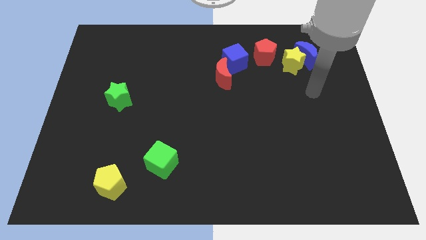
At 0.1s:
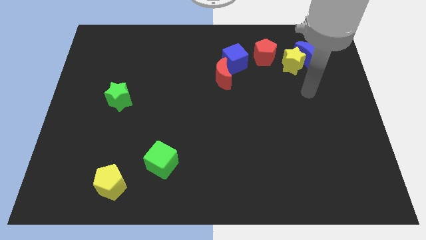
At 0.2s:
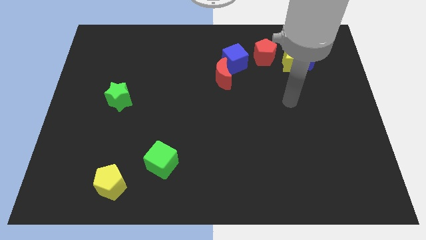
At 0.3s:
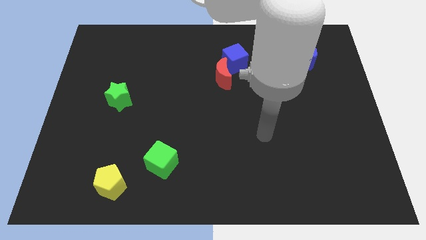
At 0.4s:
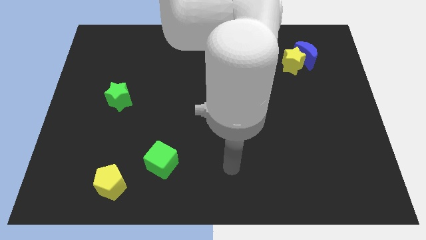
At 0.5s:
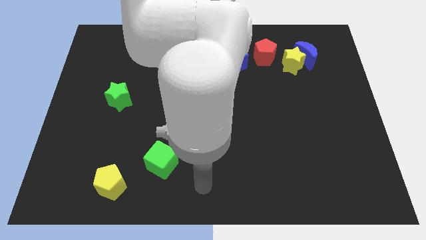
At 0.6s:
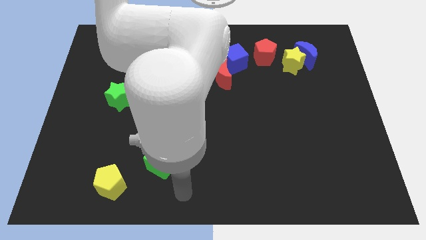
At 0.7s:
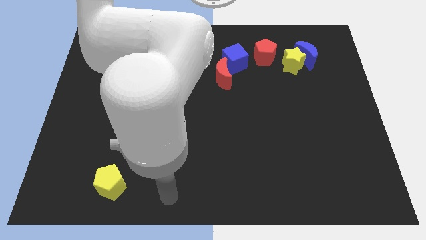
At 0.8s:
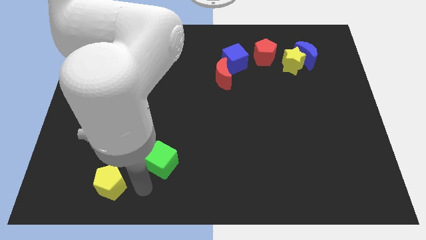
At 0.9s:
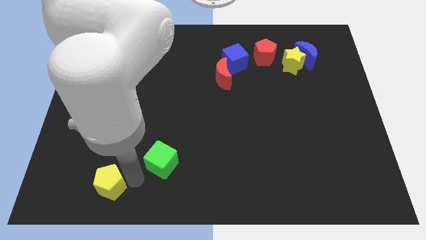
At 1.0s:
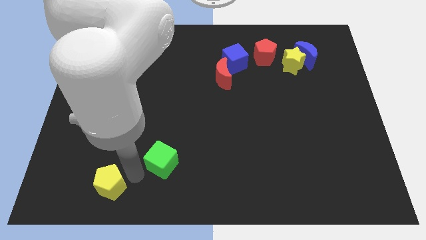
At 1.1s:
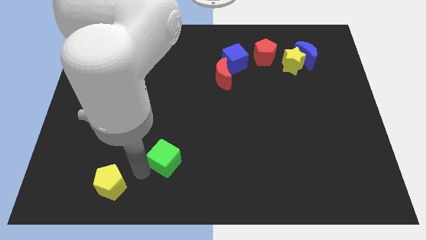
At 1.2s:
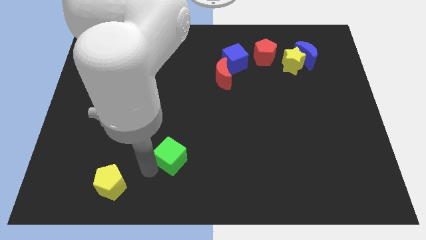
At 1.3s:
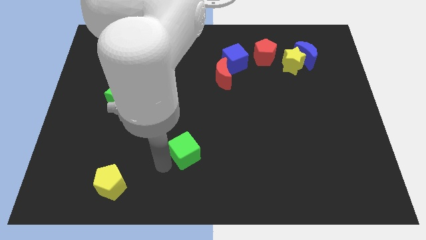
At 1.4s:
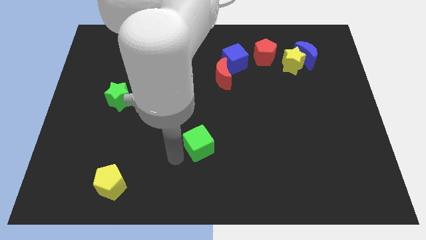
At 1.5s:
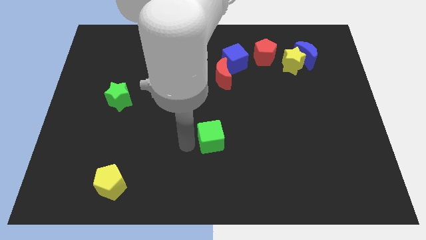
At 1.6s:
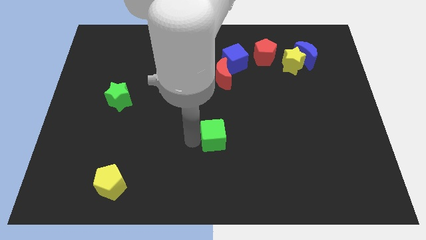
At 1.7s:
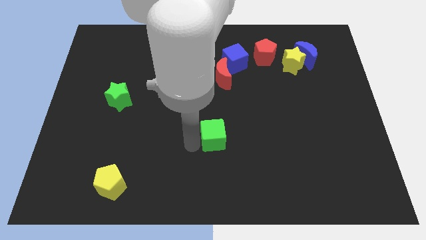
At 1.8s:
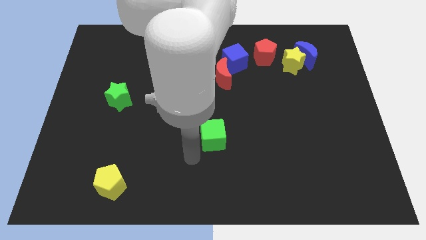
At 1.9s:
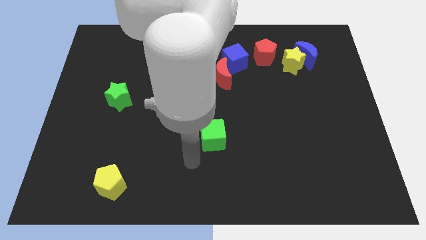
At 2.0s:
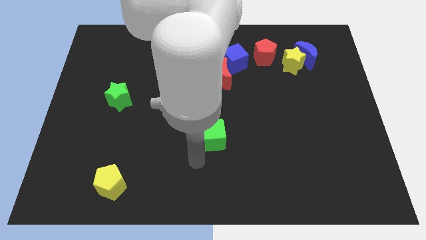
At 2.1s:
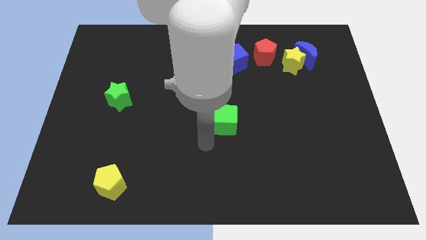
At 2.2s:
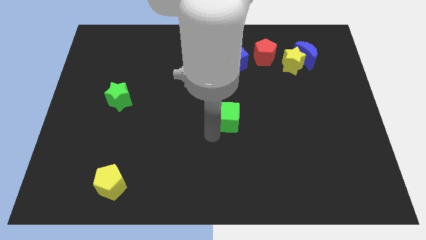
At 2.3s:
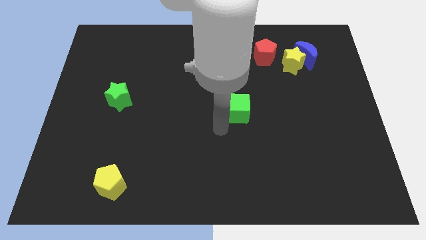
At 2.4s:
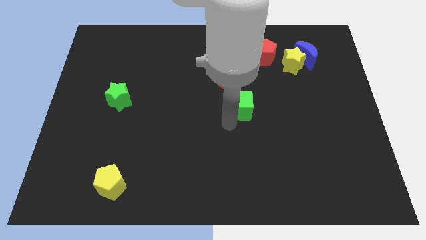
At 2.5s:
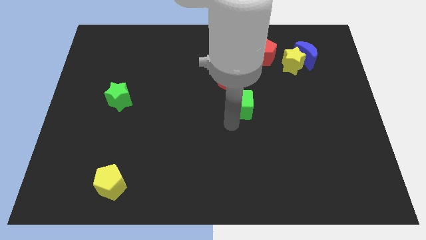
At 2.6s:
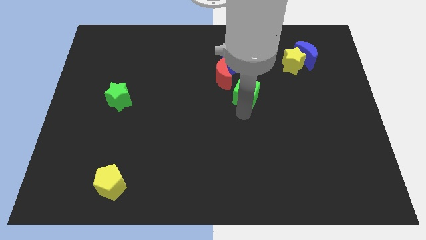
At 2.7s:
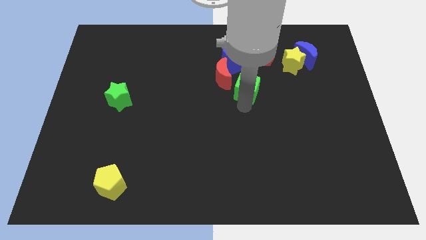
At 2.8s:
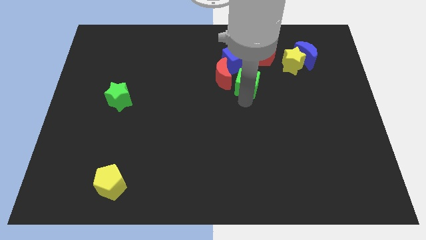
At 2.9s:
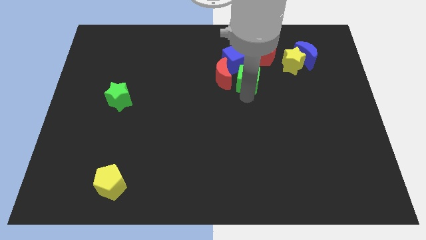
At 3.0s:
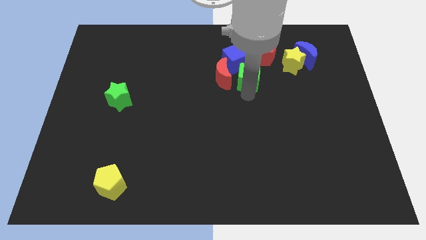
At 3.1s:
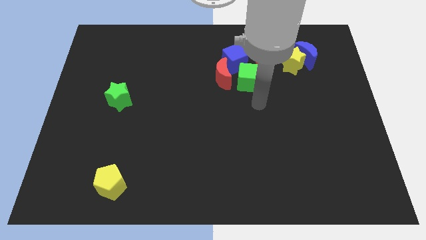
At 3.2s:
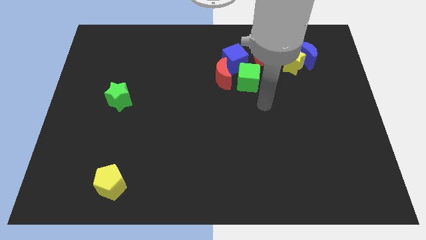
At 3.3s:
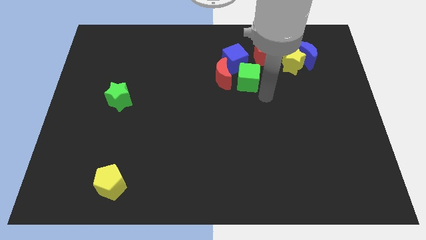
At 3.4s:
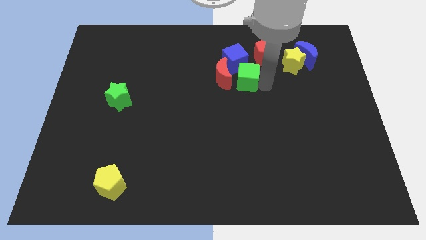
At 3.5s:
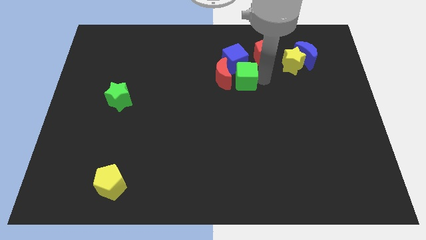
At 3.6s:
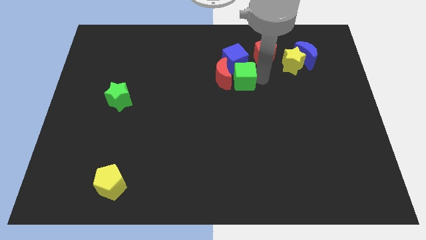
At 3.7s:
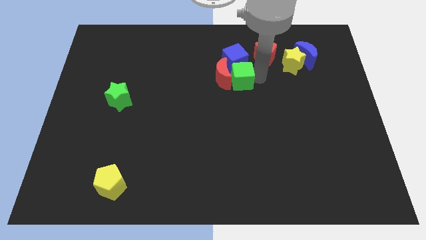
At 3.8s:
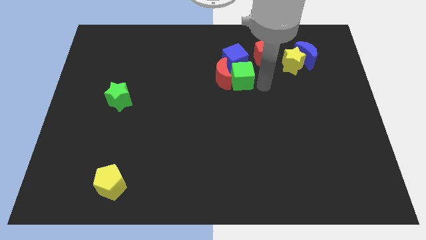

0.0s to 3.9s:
slide the green cube towards the blue cube

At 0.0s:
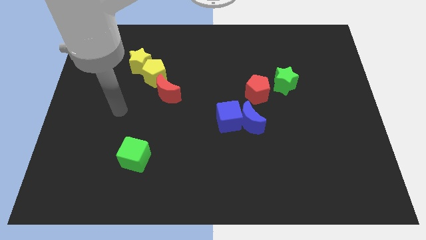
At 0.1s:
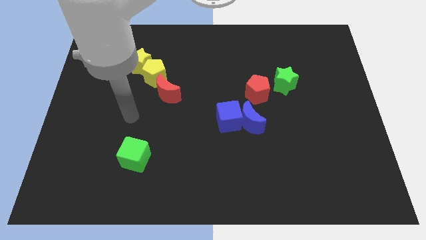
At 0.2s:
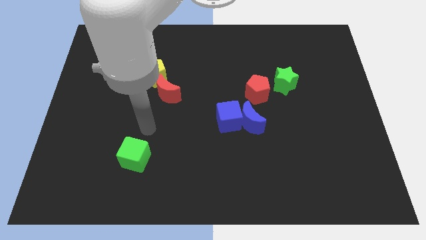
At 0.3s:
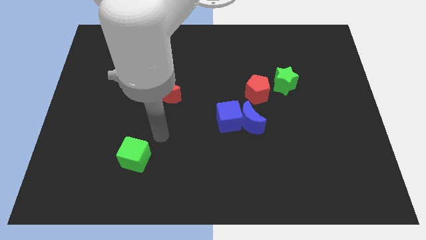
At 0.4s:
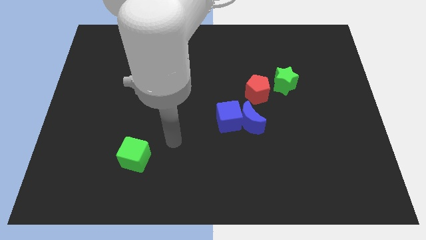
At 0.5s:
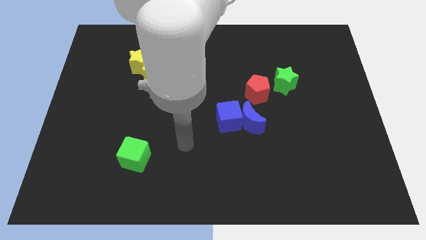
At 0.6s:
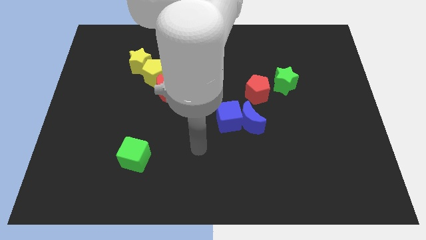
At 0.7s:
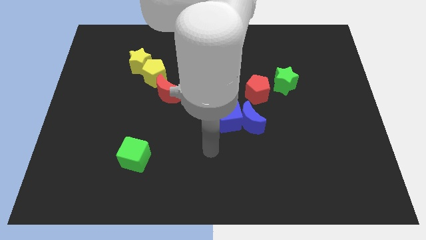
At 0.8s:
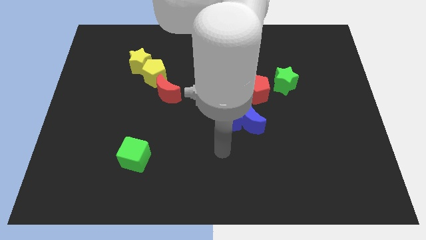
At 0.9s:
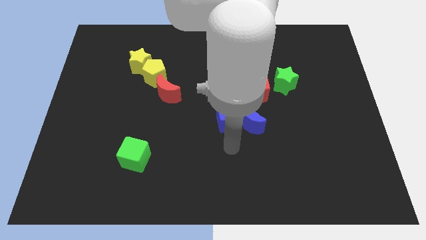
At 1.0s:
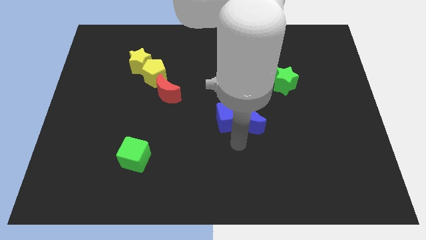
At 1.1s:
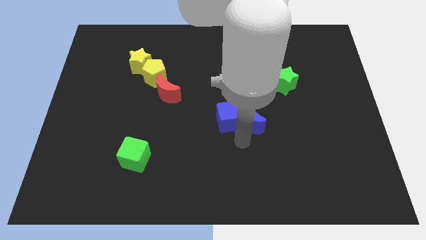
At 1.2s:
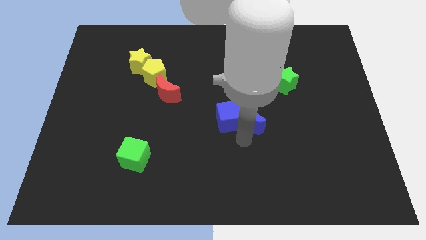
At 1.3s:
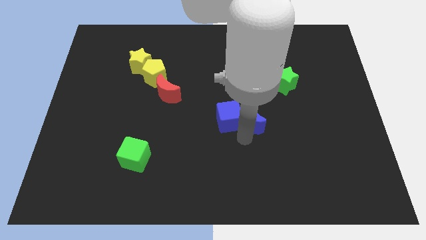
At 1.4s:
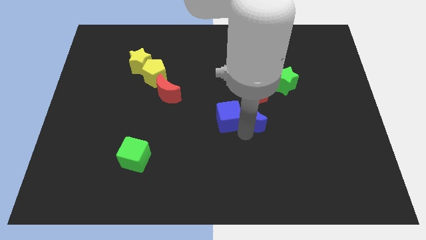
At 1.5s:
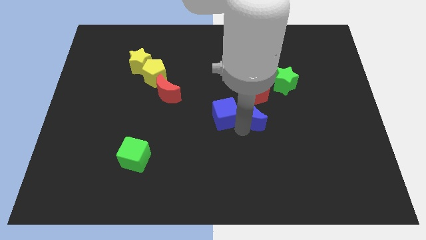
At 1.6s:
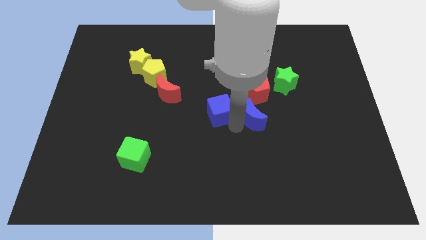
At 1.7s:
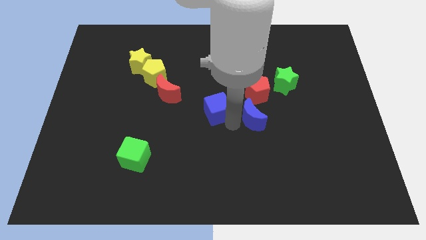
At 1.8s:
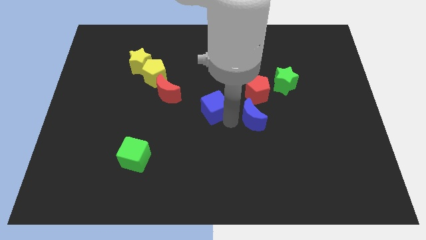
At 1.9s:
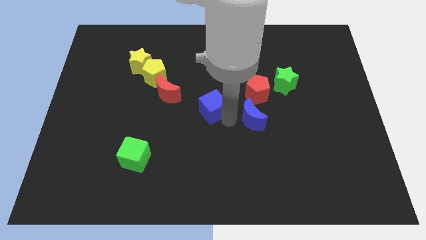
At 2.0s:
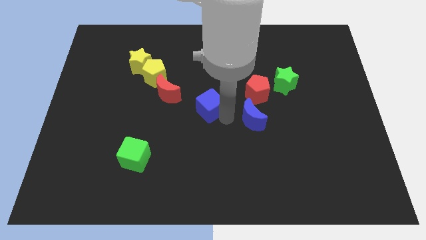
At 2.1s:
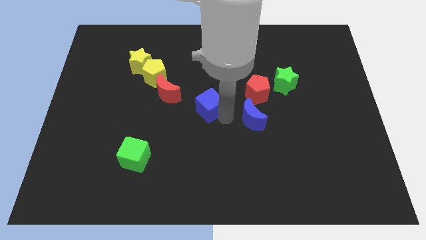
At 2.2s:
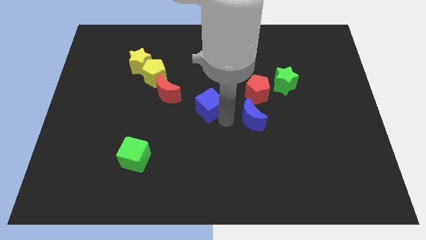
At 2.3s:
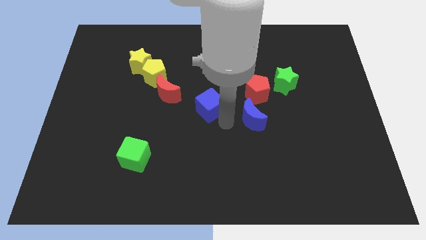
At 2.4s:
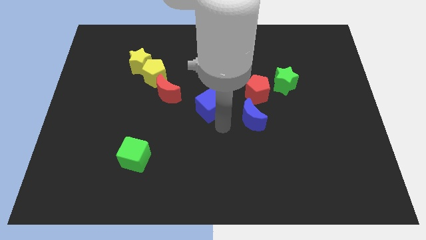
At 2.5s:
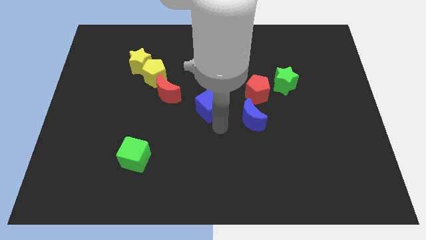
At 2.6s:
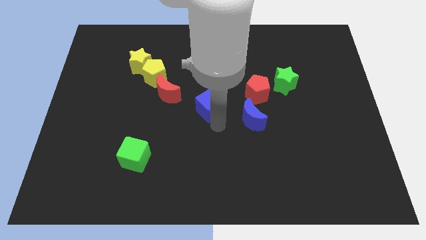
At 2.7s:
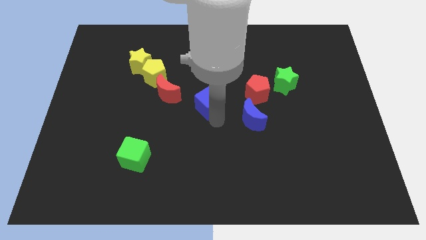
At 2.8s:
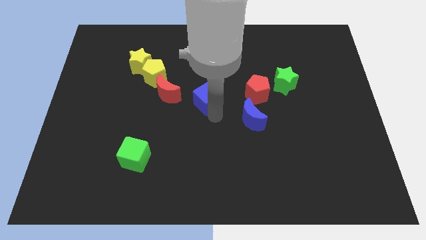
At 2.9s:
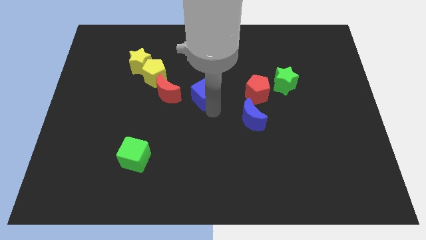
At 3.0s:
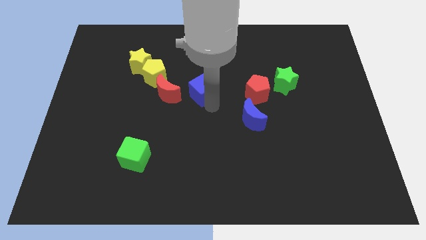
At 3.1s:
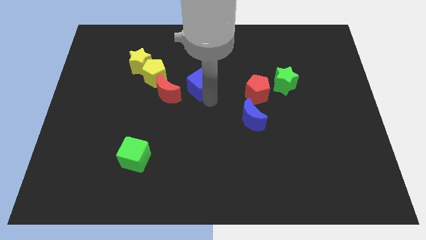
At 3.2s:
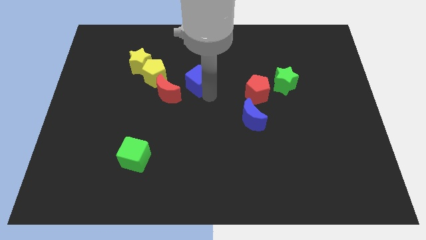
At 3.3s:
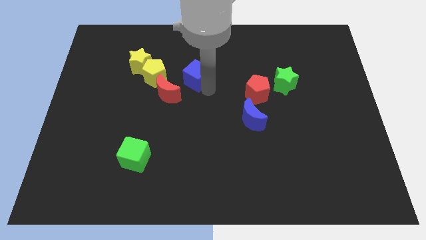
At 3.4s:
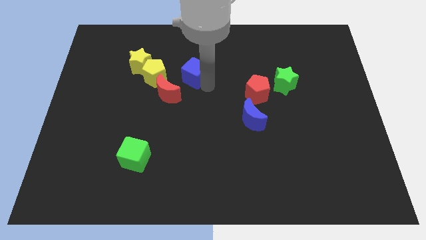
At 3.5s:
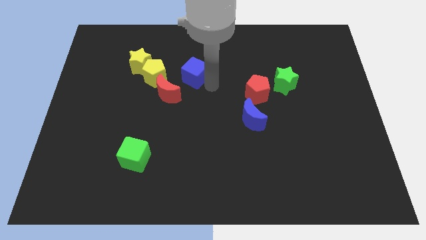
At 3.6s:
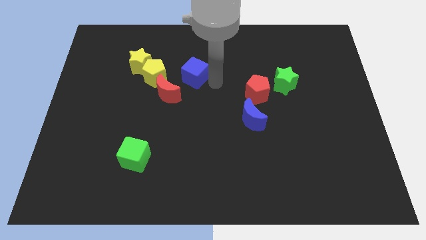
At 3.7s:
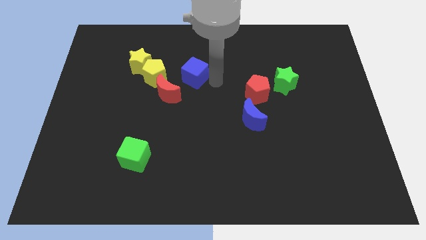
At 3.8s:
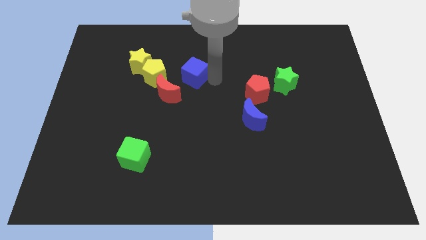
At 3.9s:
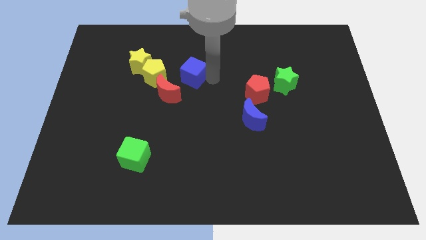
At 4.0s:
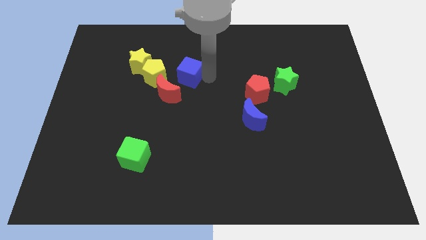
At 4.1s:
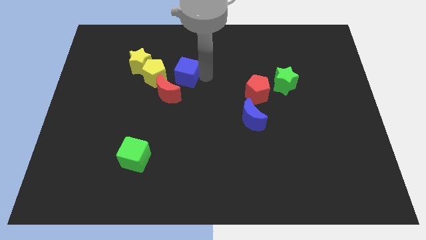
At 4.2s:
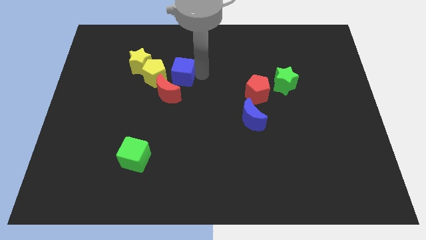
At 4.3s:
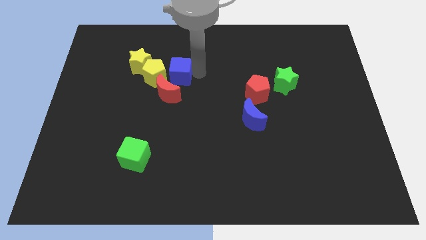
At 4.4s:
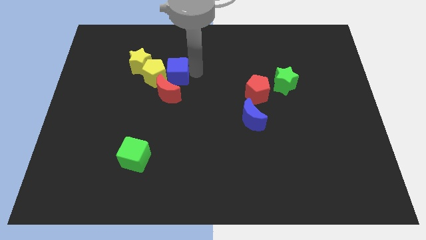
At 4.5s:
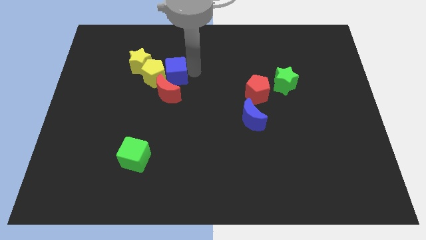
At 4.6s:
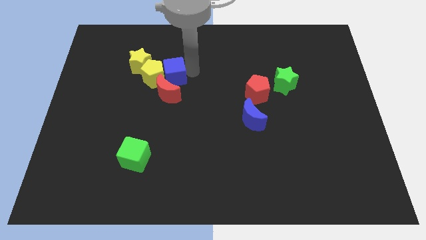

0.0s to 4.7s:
push the blue cube close to the yellow pentagon
